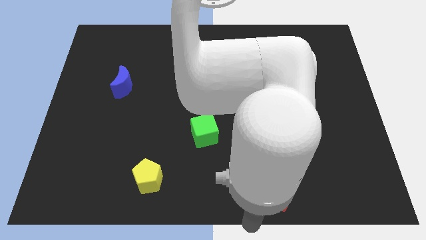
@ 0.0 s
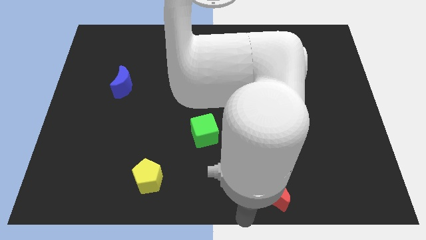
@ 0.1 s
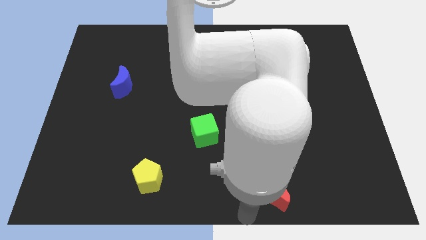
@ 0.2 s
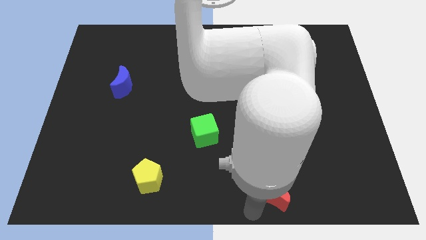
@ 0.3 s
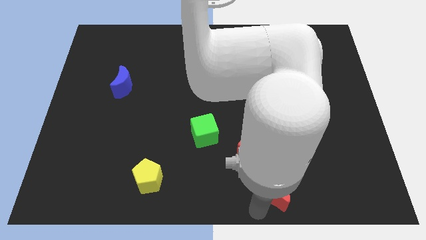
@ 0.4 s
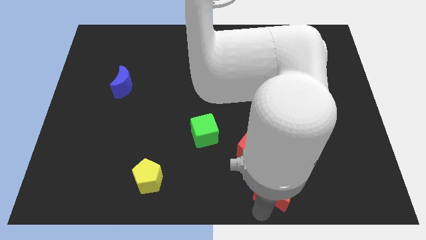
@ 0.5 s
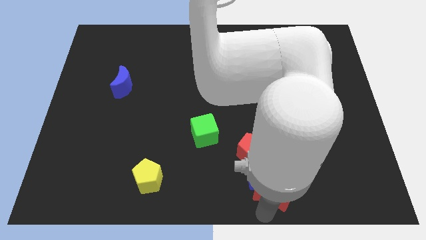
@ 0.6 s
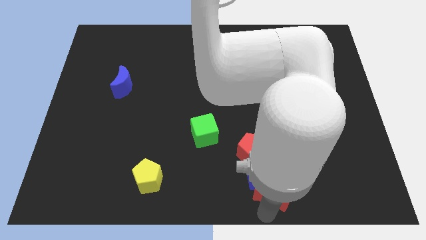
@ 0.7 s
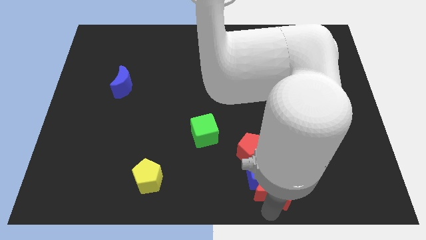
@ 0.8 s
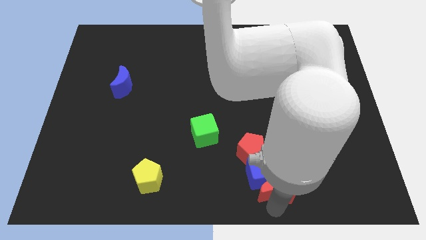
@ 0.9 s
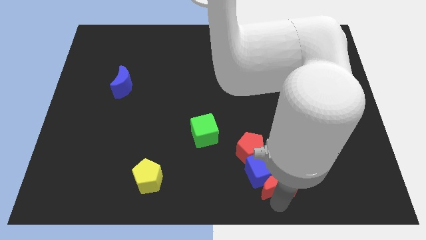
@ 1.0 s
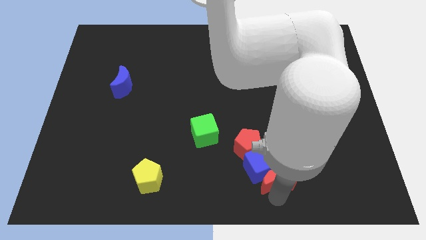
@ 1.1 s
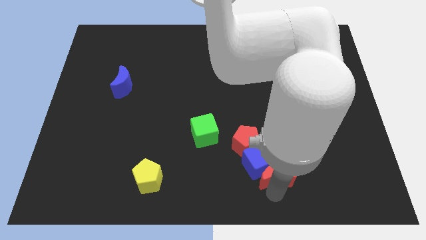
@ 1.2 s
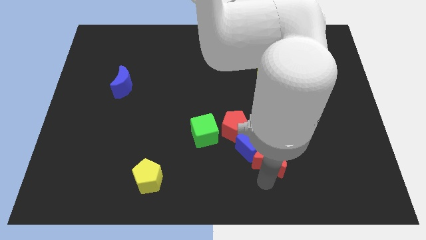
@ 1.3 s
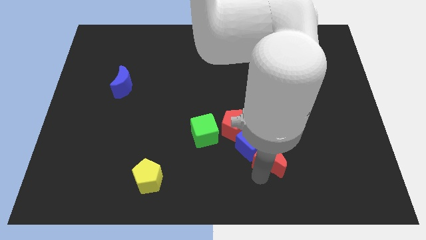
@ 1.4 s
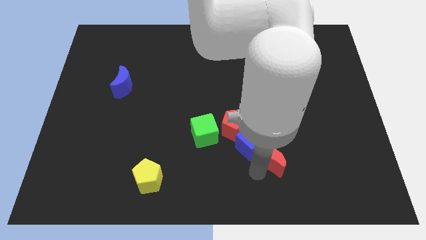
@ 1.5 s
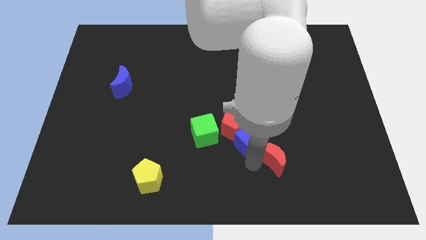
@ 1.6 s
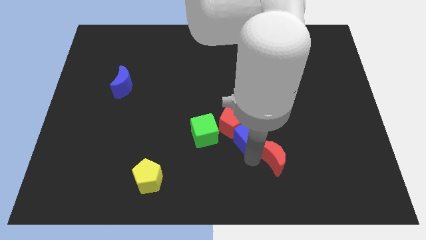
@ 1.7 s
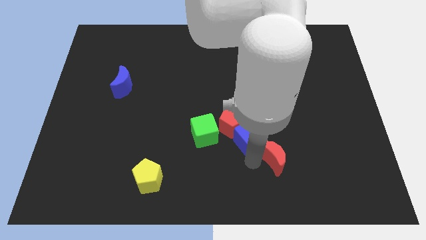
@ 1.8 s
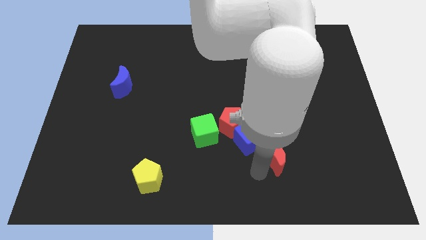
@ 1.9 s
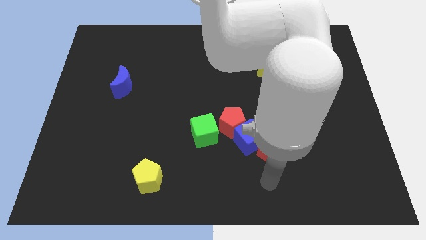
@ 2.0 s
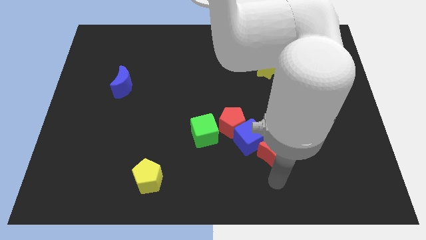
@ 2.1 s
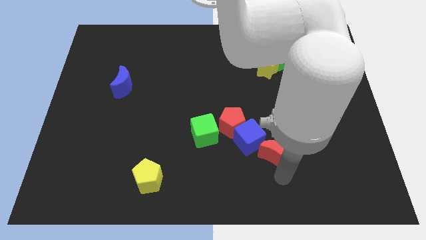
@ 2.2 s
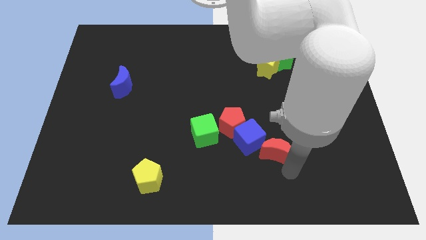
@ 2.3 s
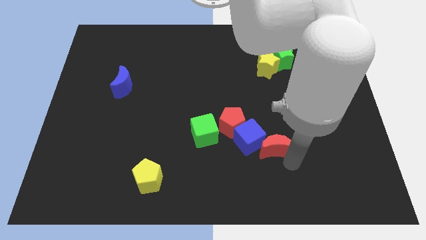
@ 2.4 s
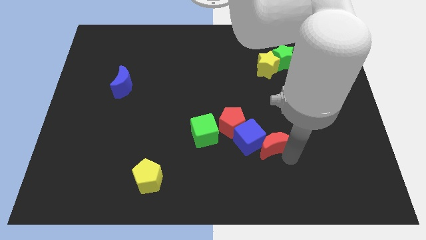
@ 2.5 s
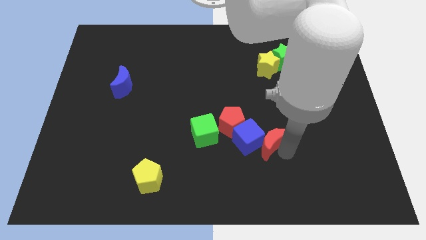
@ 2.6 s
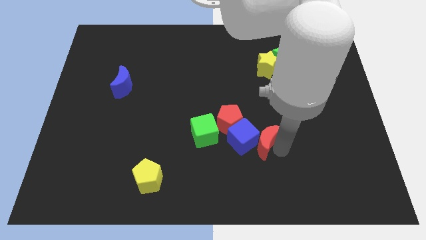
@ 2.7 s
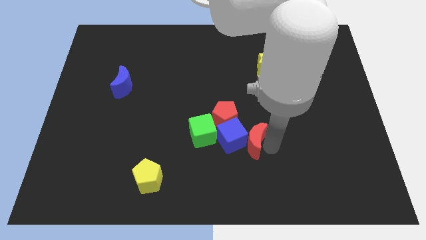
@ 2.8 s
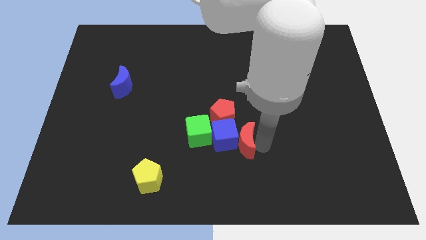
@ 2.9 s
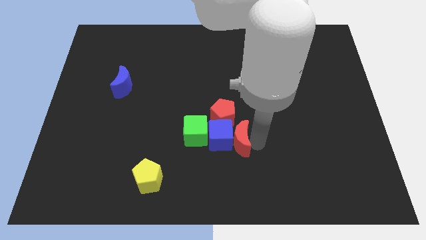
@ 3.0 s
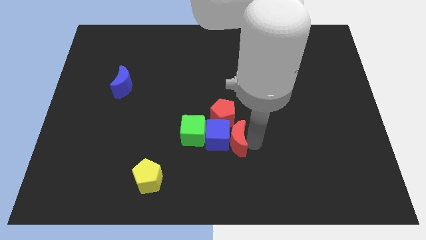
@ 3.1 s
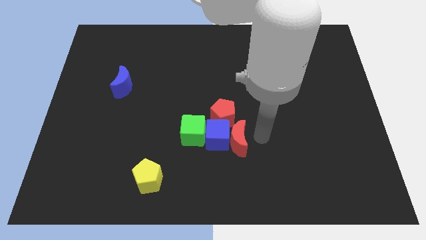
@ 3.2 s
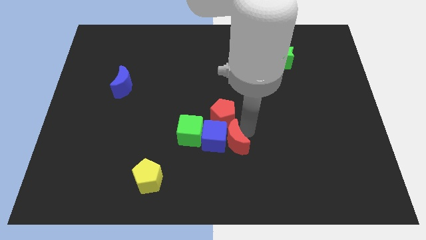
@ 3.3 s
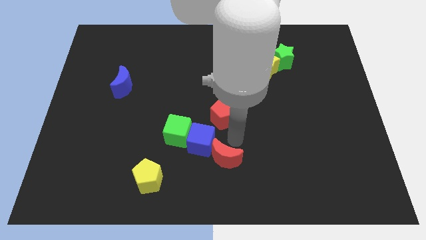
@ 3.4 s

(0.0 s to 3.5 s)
make a group of red crescent red moon blue cube and green cube in the center

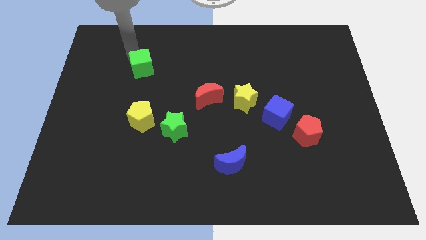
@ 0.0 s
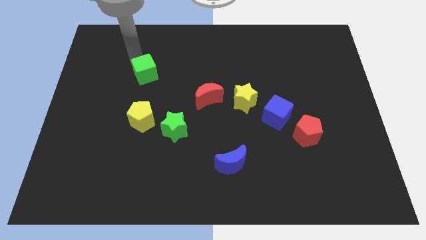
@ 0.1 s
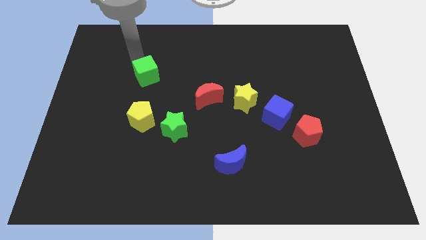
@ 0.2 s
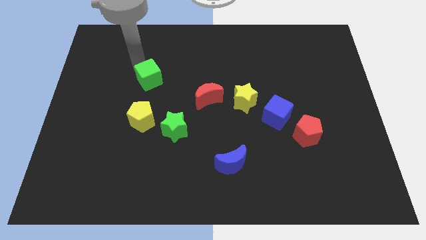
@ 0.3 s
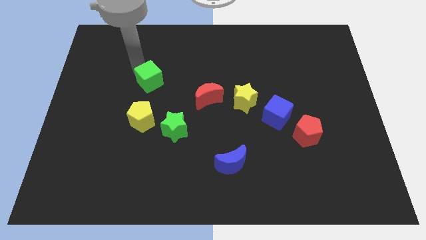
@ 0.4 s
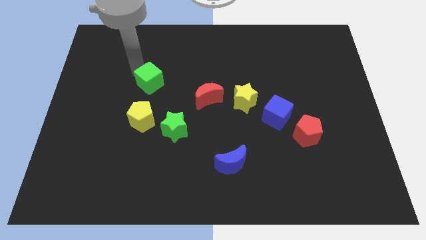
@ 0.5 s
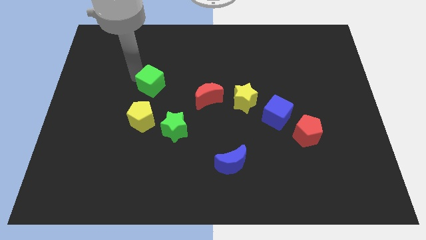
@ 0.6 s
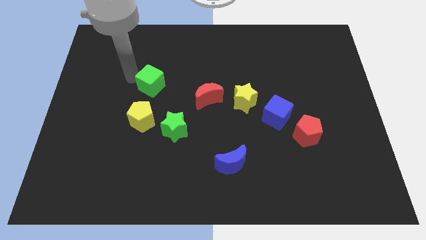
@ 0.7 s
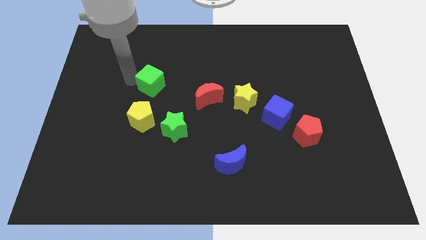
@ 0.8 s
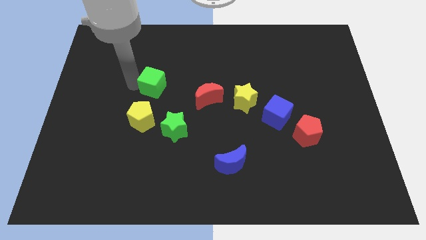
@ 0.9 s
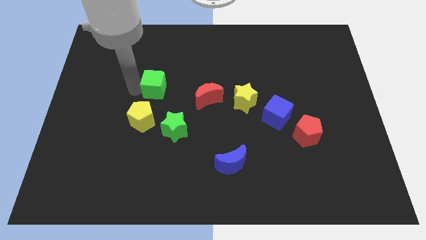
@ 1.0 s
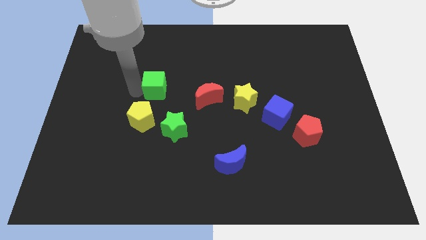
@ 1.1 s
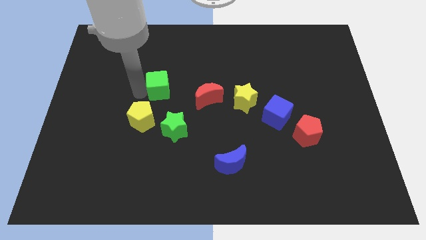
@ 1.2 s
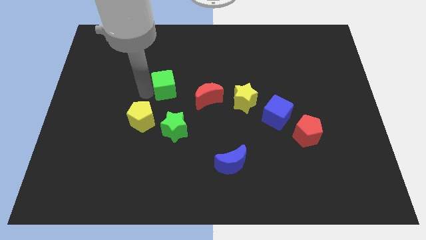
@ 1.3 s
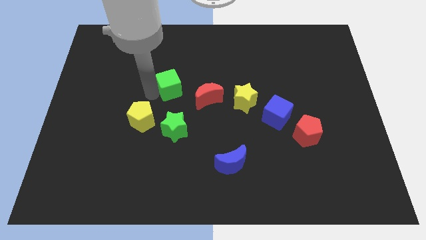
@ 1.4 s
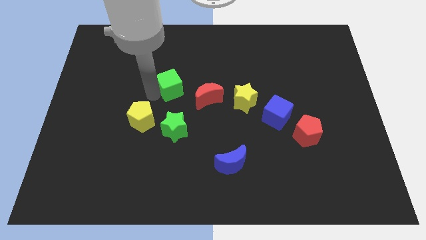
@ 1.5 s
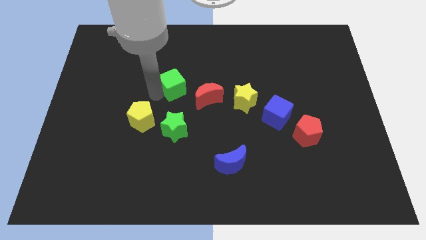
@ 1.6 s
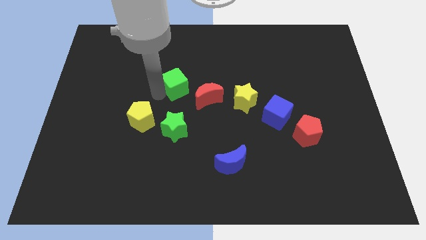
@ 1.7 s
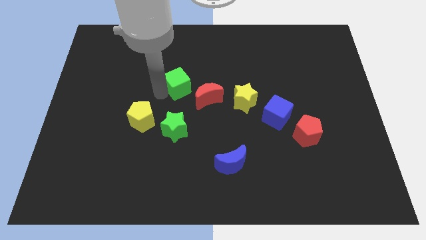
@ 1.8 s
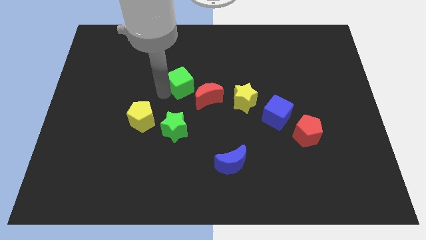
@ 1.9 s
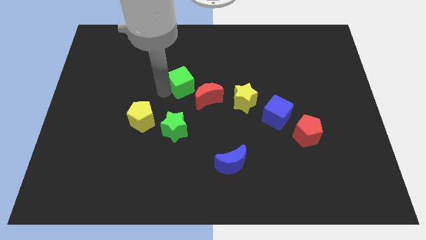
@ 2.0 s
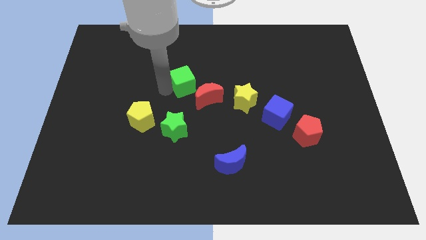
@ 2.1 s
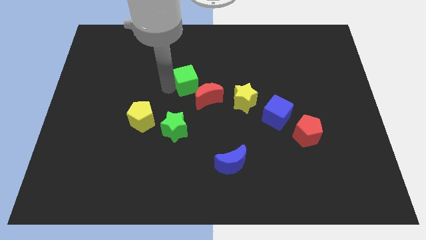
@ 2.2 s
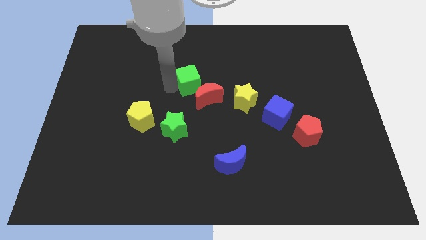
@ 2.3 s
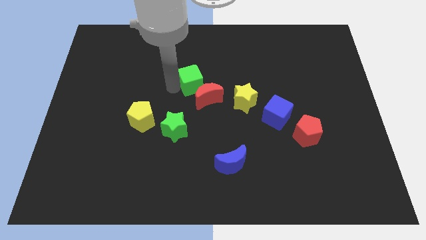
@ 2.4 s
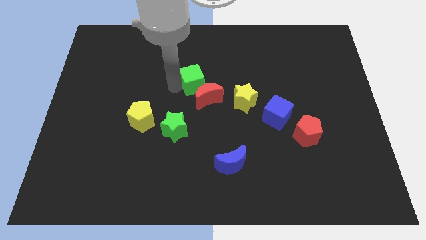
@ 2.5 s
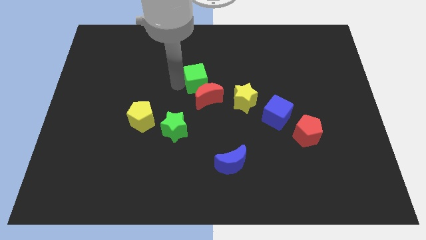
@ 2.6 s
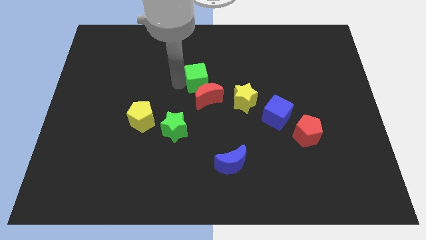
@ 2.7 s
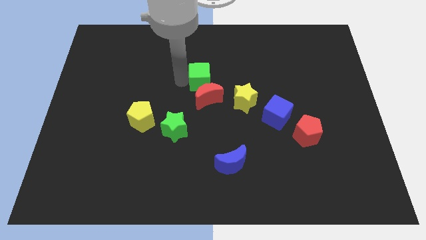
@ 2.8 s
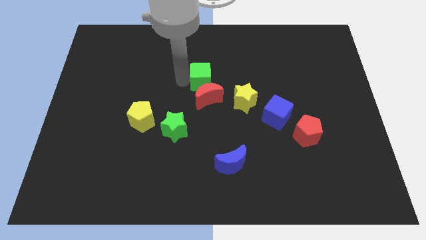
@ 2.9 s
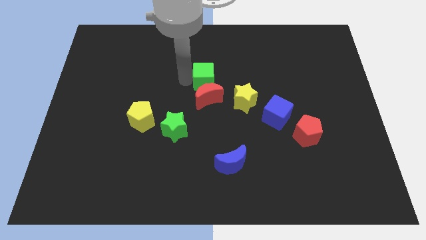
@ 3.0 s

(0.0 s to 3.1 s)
place the green cube to the top of the red moon

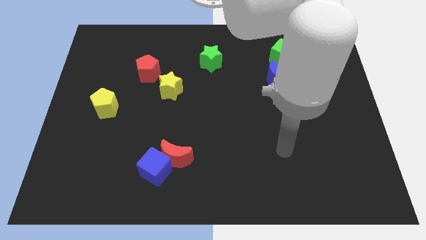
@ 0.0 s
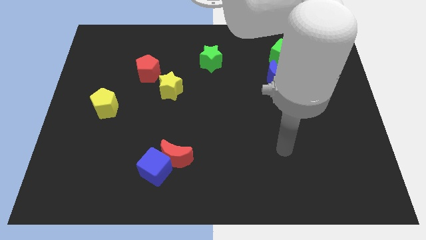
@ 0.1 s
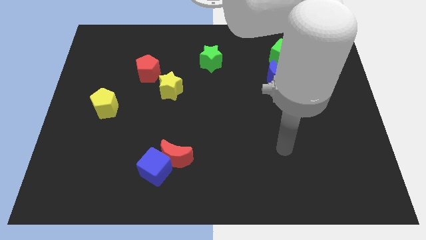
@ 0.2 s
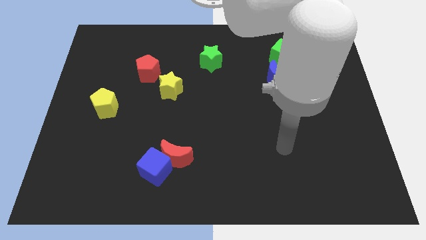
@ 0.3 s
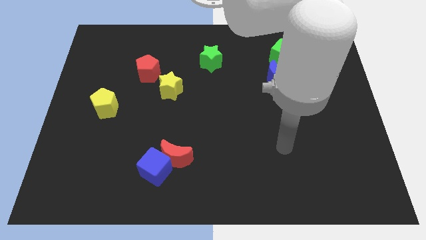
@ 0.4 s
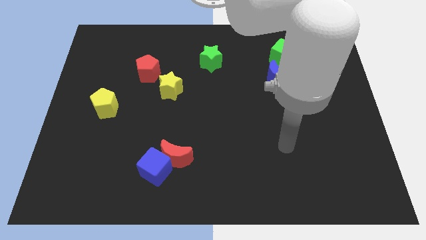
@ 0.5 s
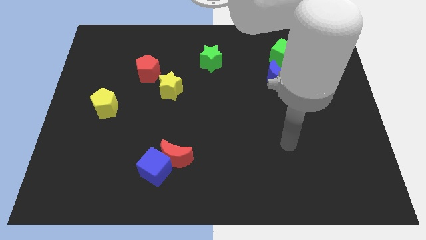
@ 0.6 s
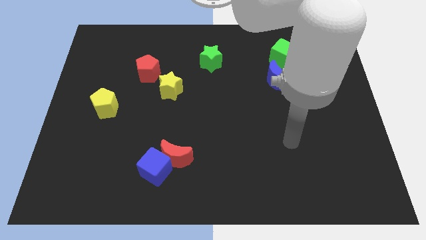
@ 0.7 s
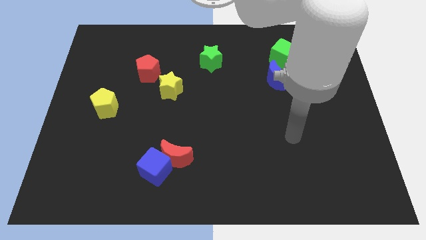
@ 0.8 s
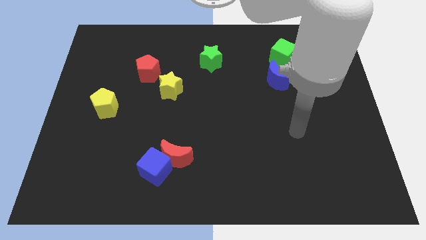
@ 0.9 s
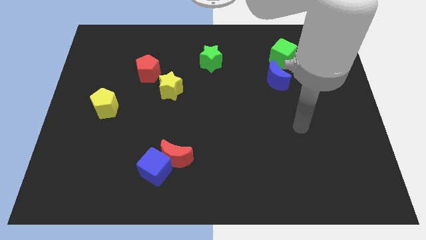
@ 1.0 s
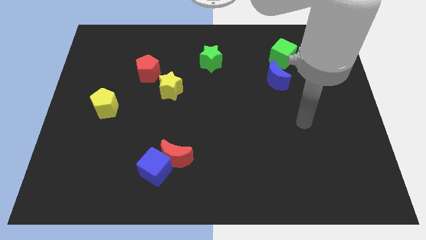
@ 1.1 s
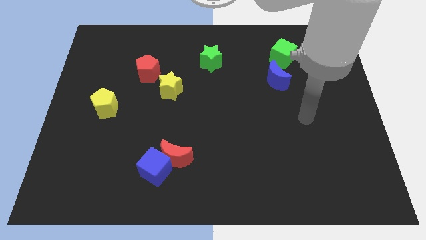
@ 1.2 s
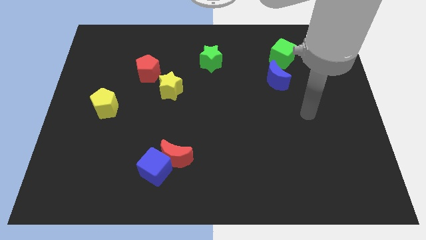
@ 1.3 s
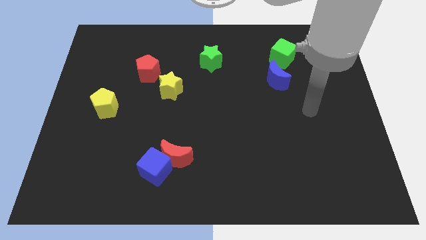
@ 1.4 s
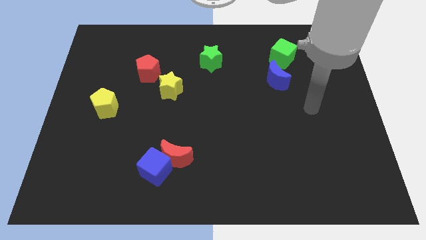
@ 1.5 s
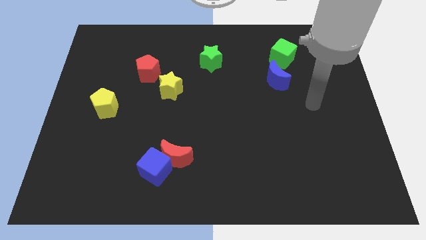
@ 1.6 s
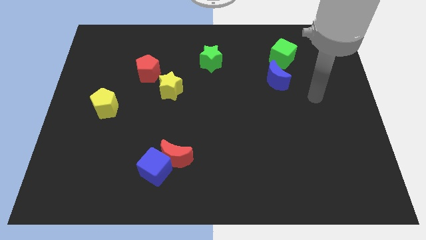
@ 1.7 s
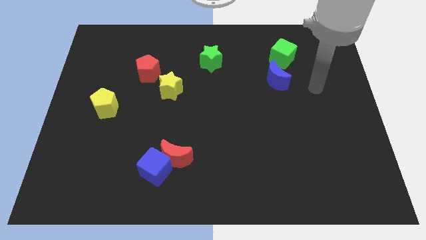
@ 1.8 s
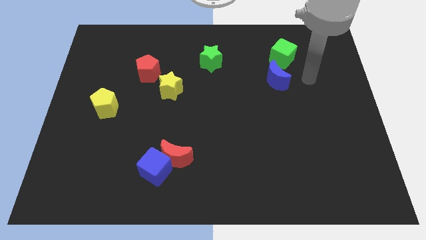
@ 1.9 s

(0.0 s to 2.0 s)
place the arm to the right of the blue moon

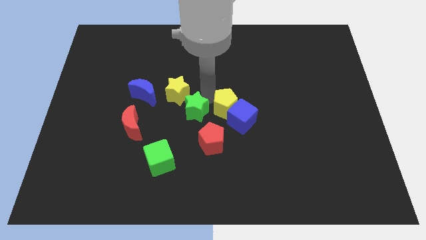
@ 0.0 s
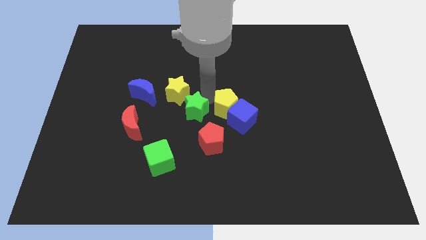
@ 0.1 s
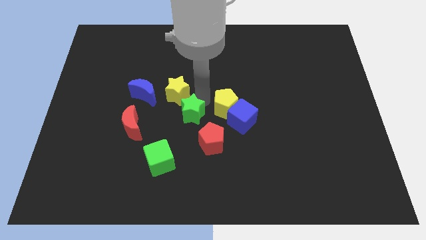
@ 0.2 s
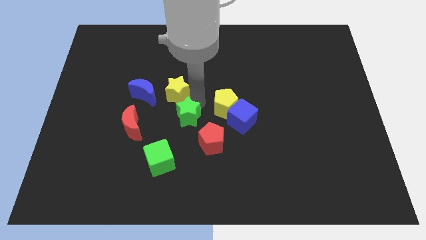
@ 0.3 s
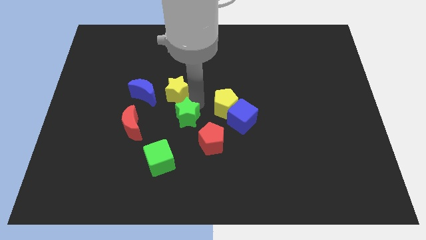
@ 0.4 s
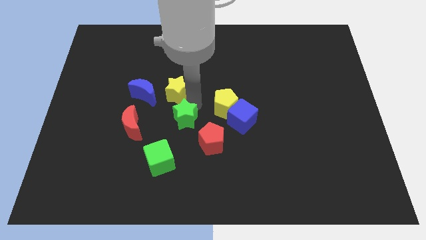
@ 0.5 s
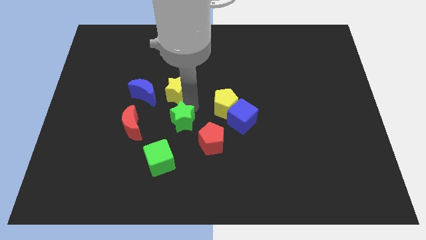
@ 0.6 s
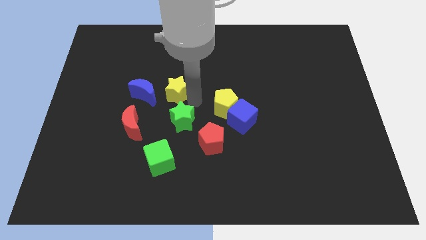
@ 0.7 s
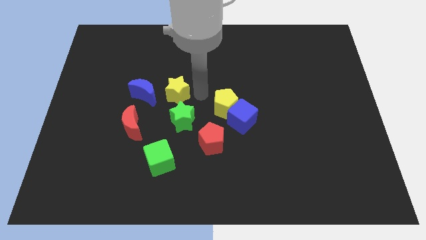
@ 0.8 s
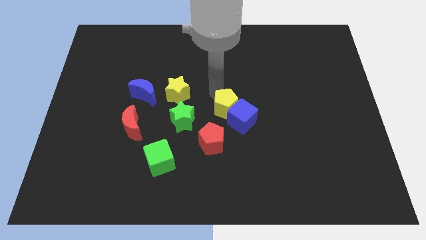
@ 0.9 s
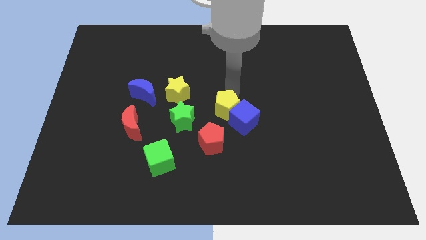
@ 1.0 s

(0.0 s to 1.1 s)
place the green star below the yellow star
